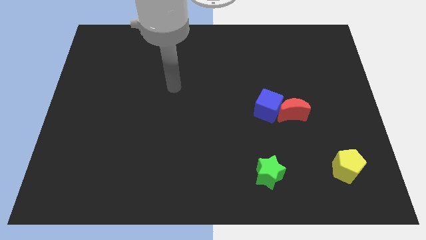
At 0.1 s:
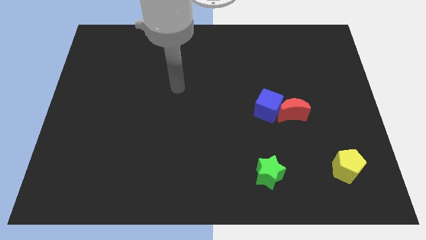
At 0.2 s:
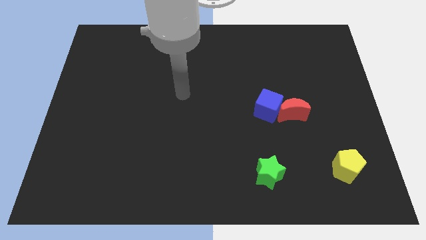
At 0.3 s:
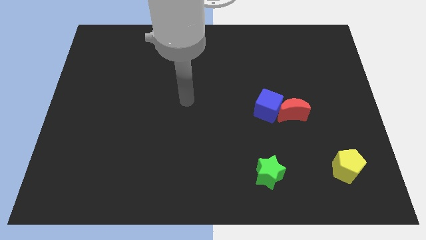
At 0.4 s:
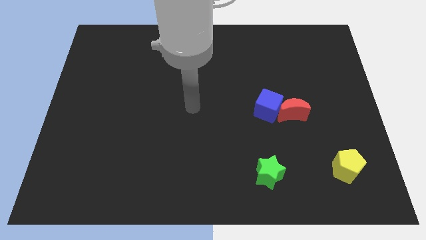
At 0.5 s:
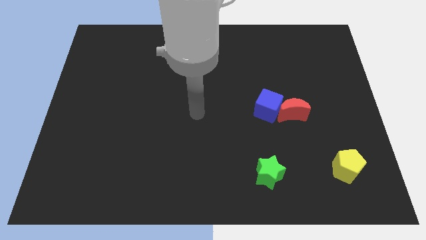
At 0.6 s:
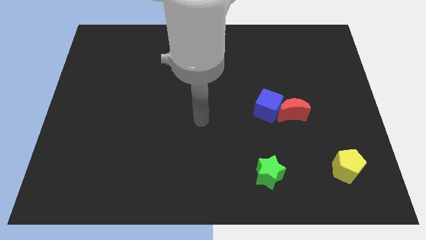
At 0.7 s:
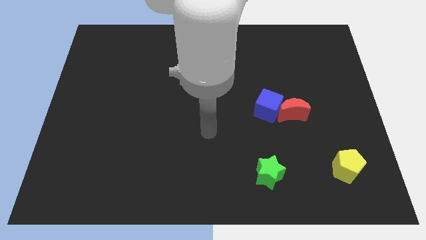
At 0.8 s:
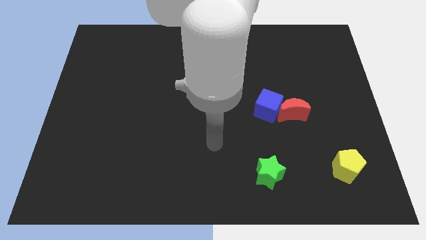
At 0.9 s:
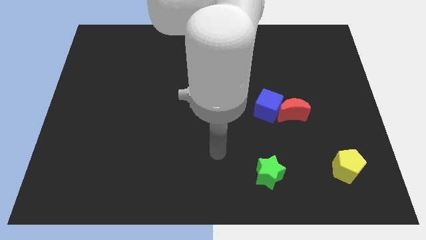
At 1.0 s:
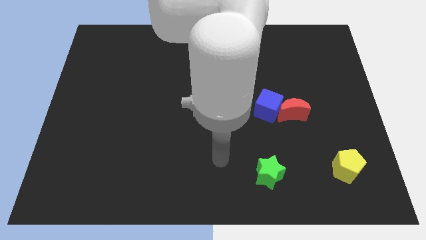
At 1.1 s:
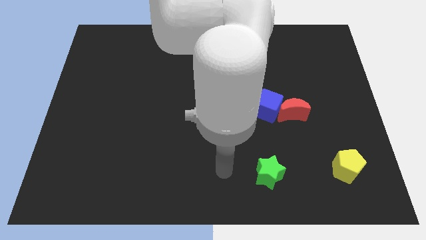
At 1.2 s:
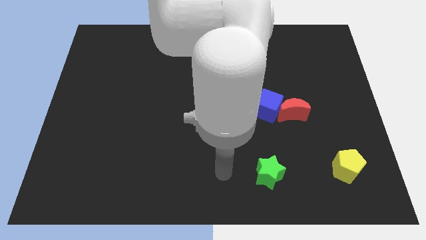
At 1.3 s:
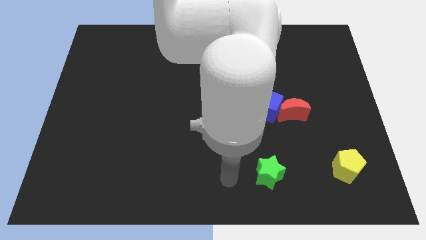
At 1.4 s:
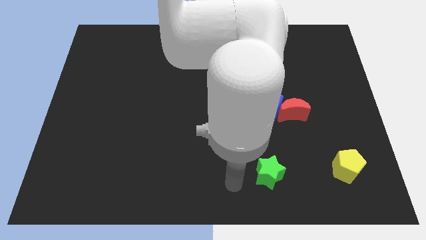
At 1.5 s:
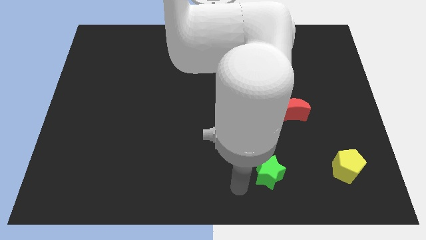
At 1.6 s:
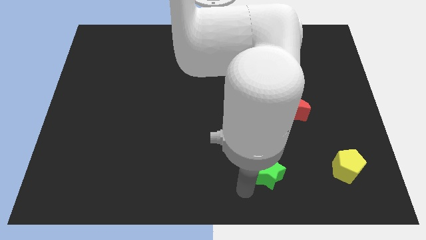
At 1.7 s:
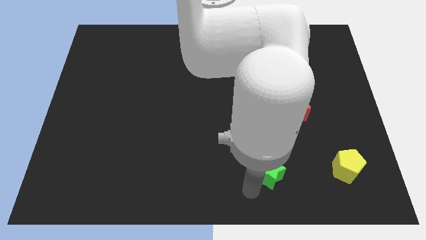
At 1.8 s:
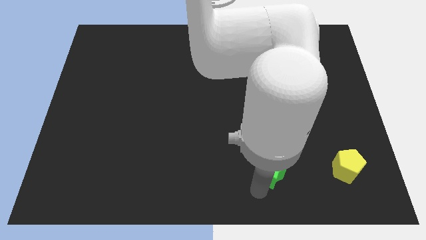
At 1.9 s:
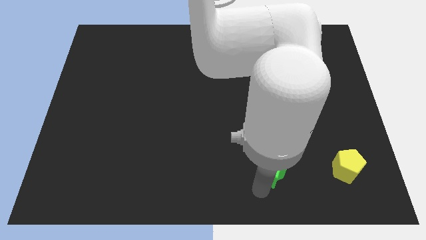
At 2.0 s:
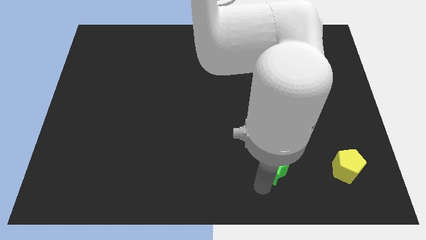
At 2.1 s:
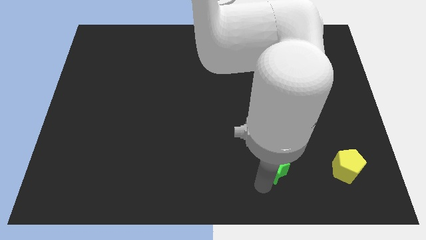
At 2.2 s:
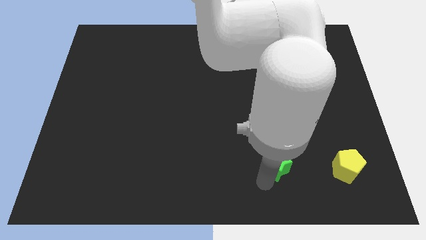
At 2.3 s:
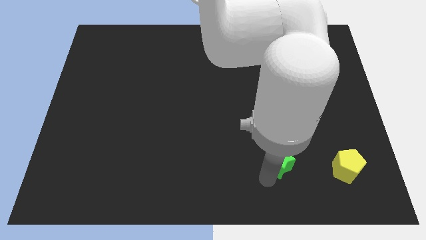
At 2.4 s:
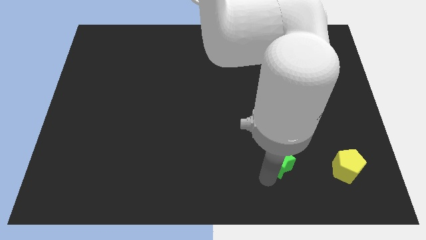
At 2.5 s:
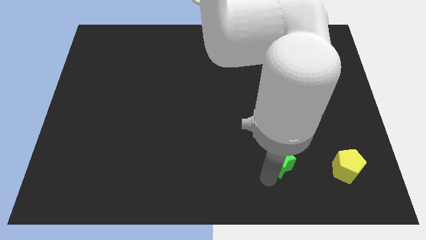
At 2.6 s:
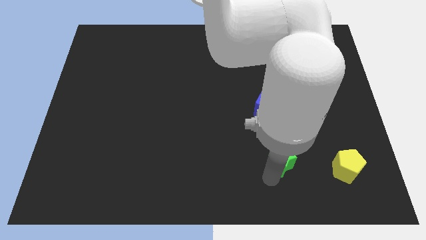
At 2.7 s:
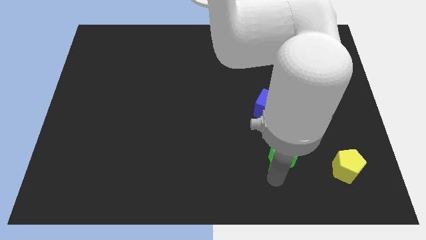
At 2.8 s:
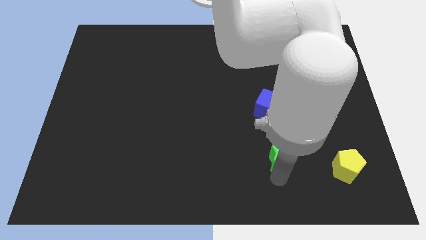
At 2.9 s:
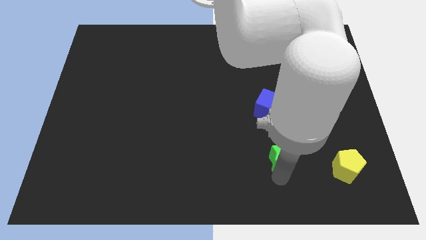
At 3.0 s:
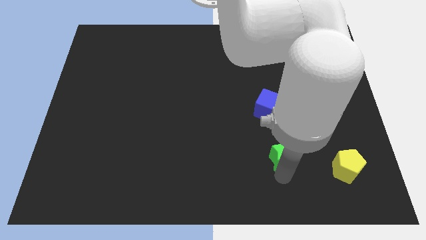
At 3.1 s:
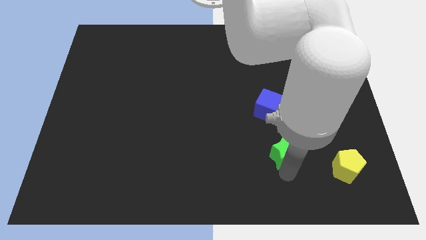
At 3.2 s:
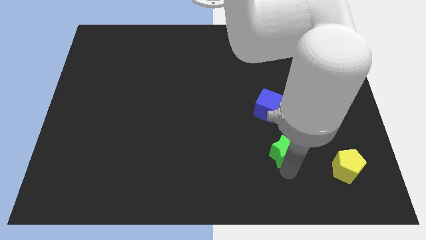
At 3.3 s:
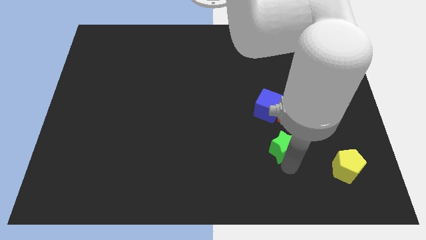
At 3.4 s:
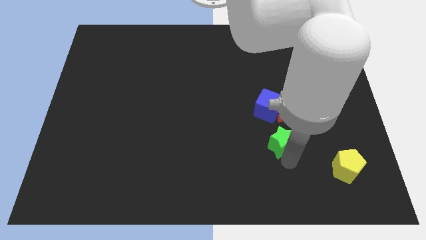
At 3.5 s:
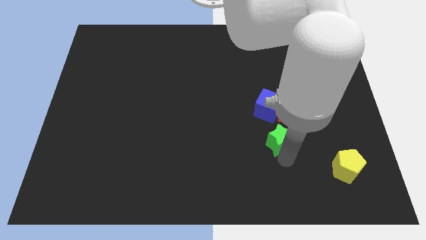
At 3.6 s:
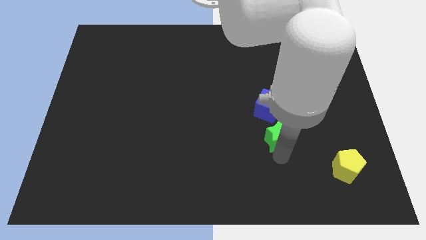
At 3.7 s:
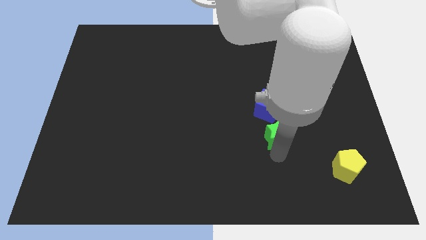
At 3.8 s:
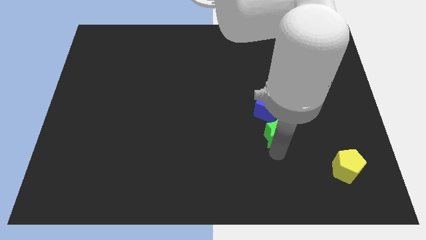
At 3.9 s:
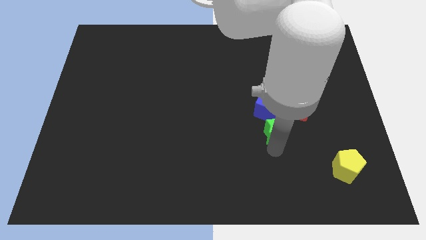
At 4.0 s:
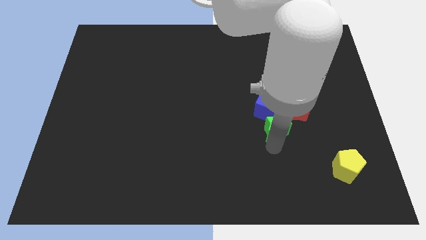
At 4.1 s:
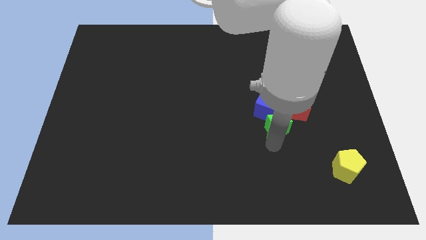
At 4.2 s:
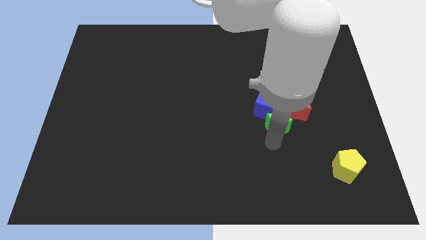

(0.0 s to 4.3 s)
put the green block next to the cube

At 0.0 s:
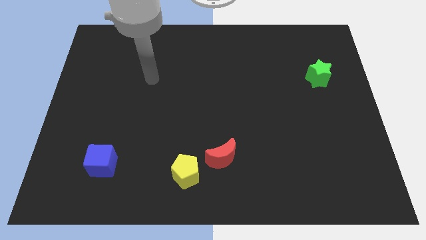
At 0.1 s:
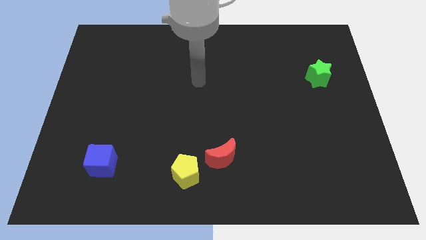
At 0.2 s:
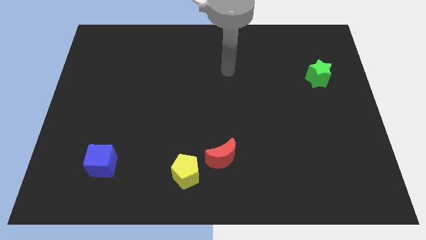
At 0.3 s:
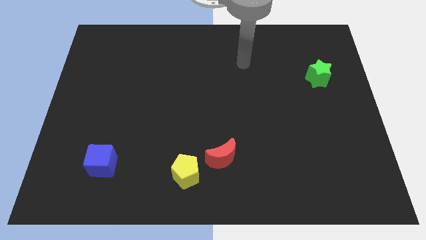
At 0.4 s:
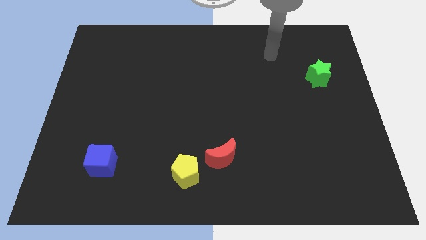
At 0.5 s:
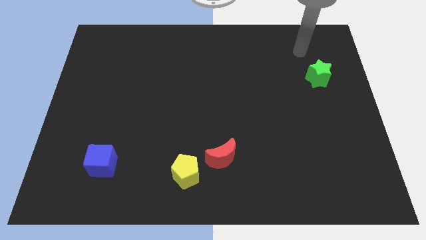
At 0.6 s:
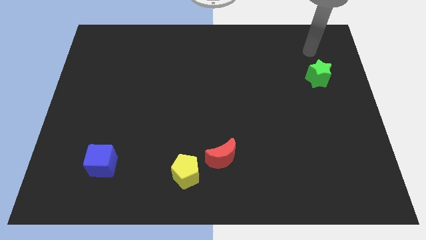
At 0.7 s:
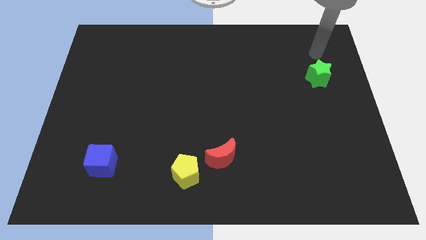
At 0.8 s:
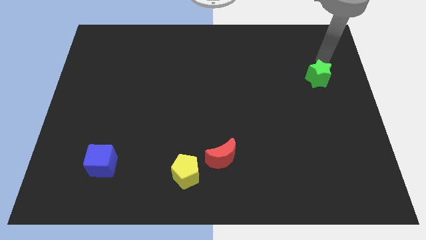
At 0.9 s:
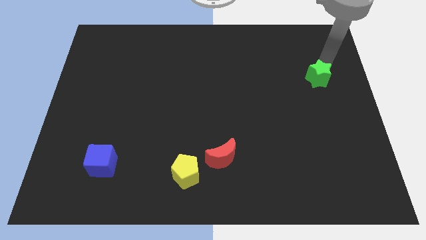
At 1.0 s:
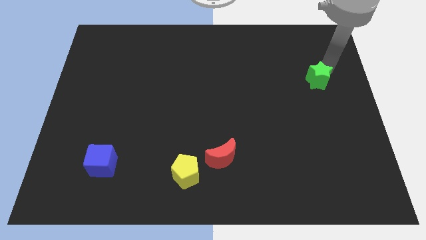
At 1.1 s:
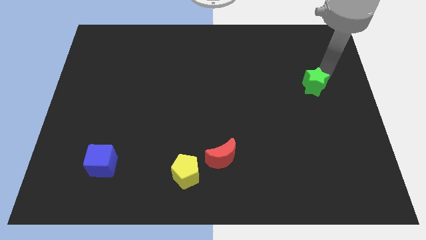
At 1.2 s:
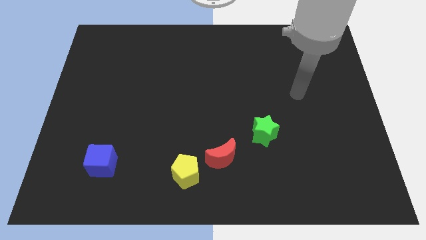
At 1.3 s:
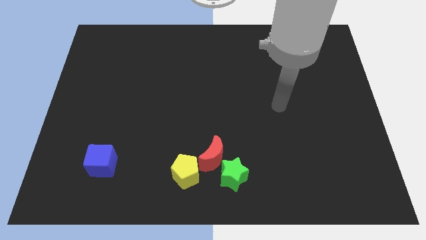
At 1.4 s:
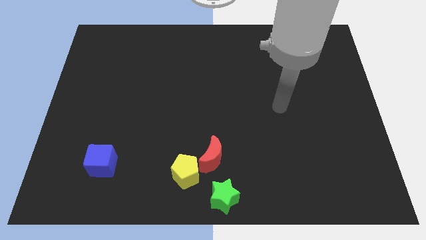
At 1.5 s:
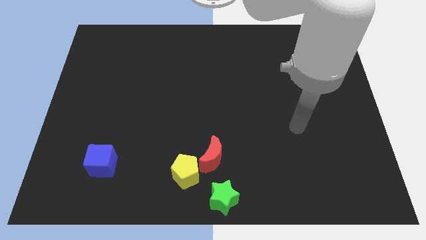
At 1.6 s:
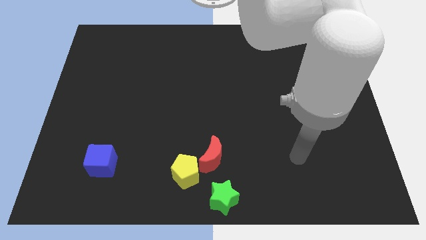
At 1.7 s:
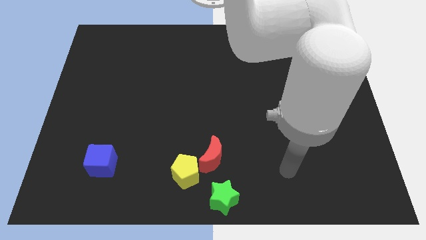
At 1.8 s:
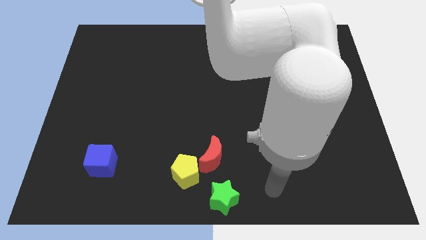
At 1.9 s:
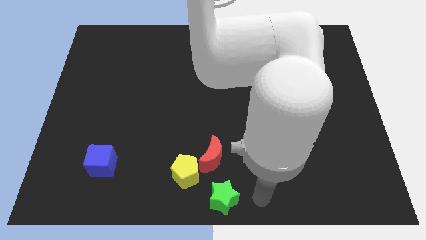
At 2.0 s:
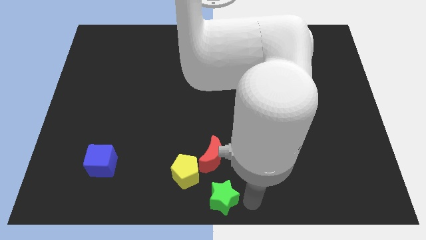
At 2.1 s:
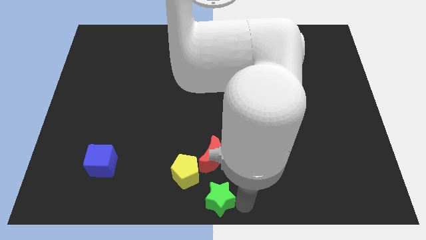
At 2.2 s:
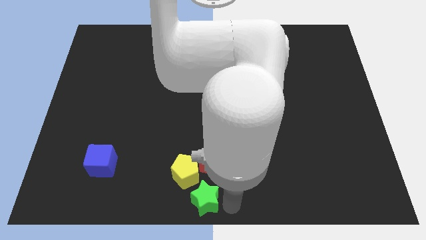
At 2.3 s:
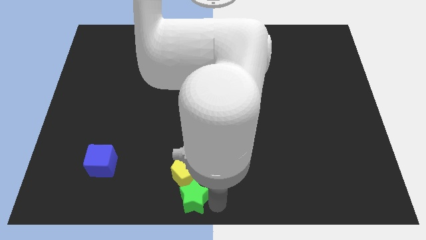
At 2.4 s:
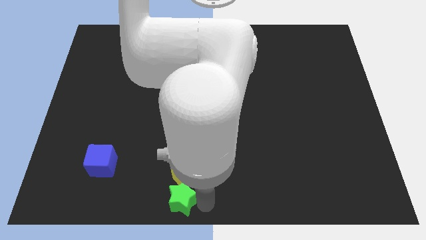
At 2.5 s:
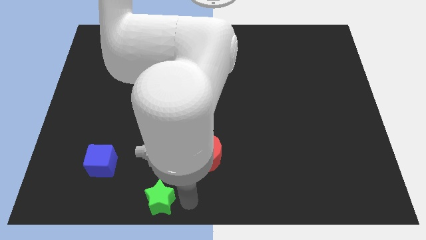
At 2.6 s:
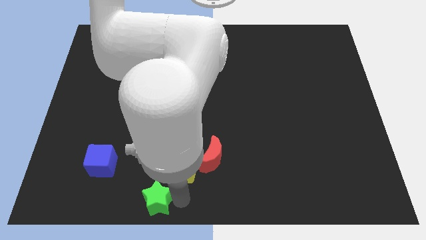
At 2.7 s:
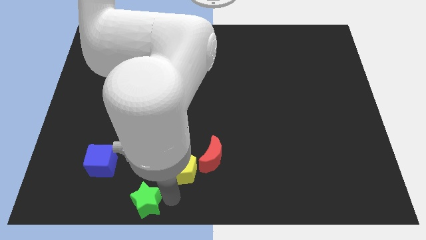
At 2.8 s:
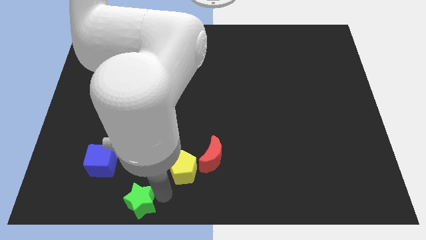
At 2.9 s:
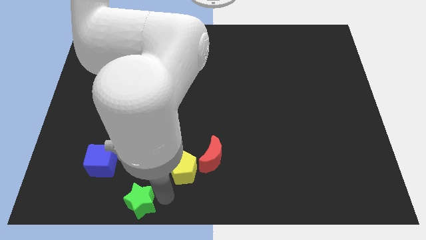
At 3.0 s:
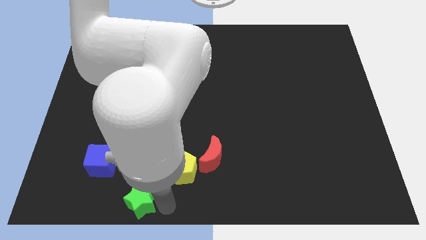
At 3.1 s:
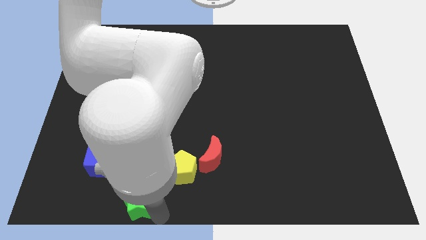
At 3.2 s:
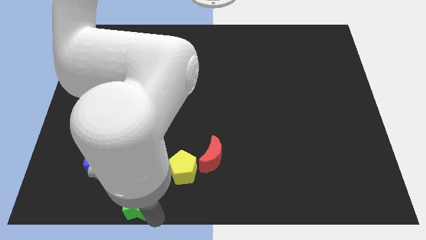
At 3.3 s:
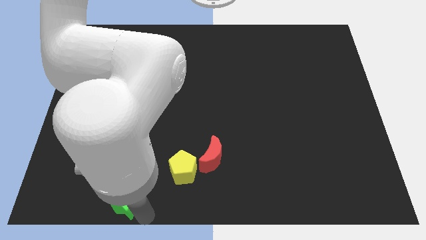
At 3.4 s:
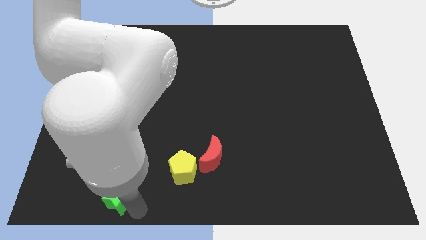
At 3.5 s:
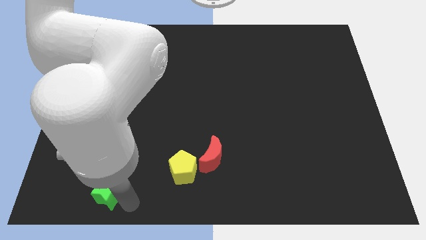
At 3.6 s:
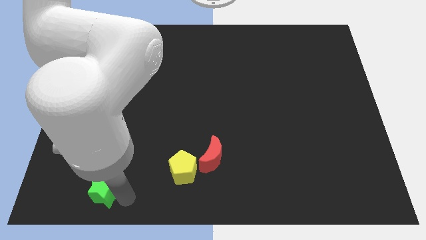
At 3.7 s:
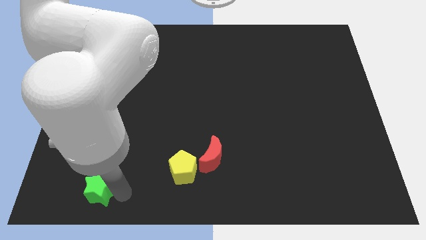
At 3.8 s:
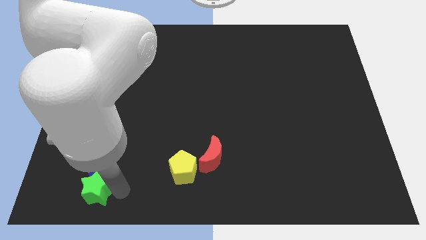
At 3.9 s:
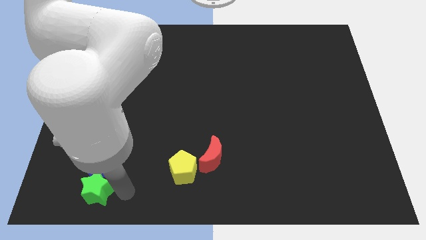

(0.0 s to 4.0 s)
push the star next to the blue cube
